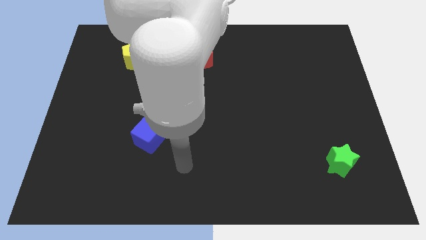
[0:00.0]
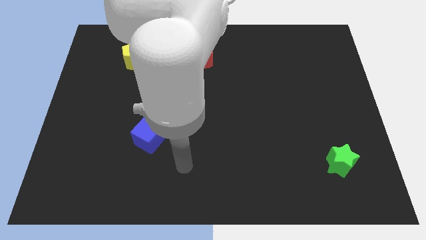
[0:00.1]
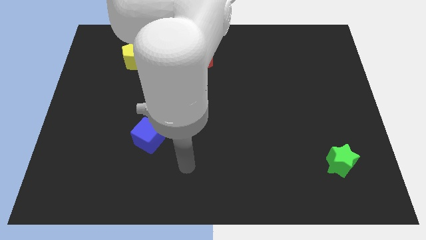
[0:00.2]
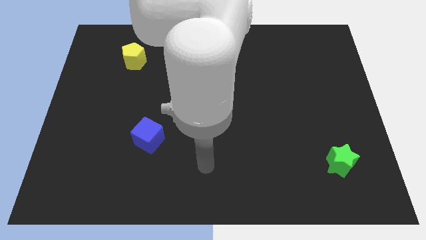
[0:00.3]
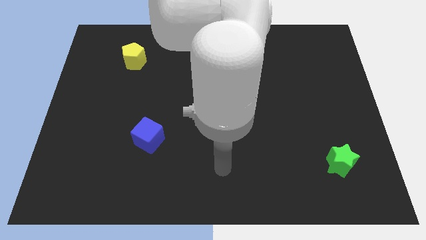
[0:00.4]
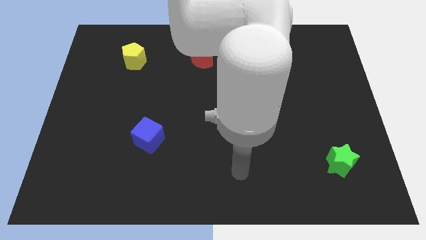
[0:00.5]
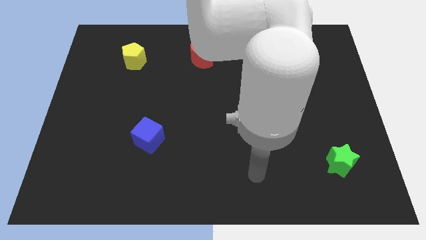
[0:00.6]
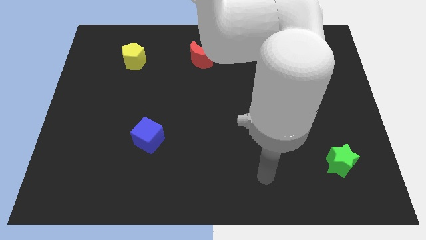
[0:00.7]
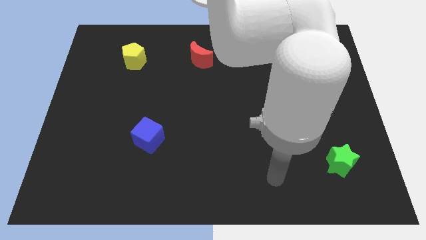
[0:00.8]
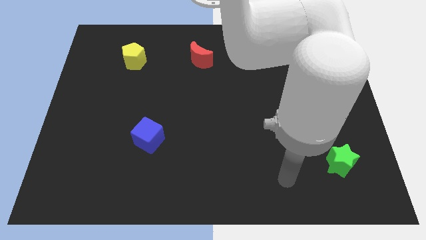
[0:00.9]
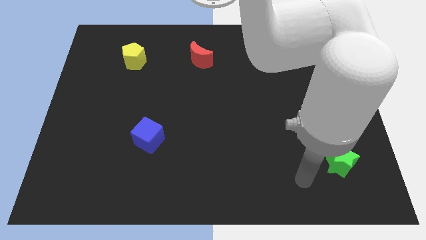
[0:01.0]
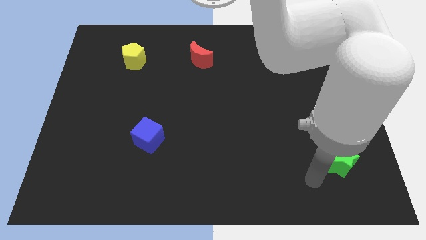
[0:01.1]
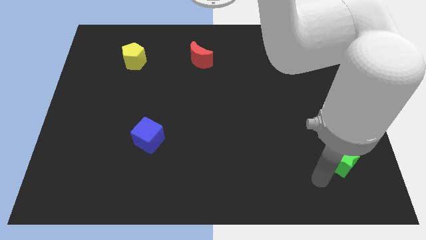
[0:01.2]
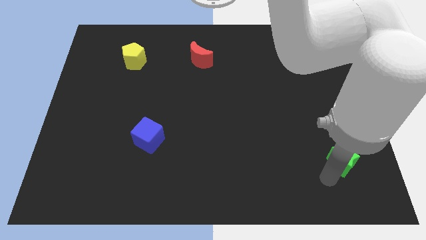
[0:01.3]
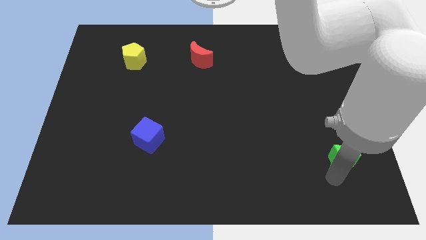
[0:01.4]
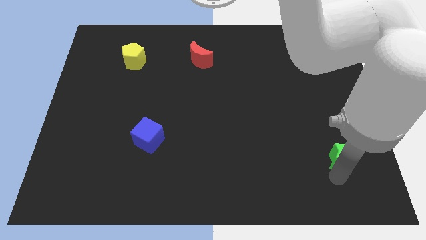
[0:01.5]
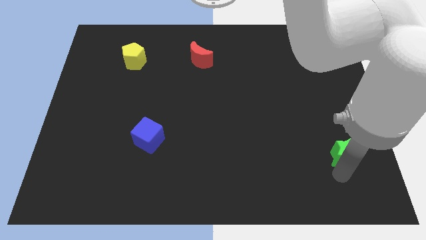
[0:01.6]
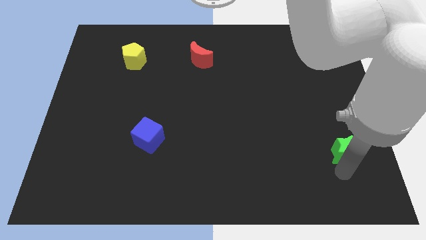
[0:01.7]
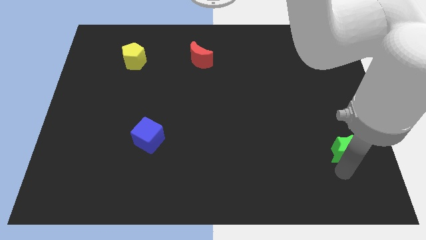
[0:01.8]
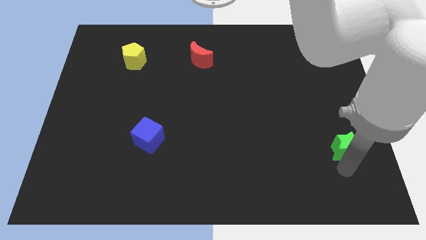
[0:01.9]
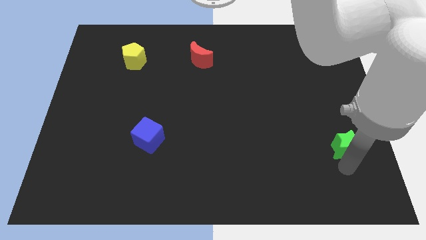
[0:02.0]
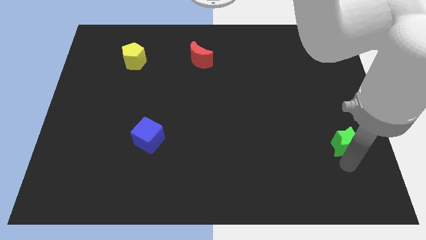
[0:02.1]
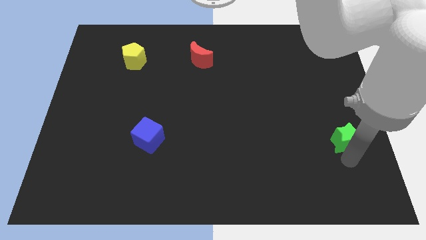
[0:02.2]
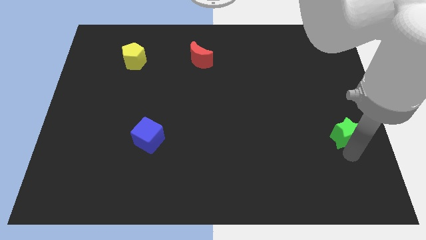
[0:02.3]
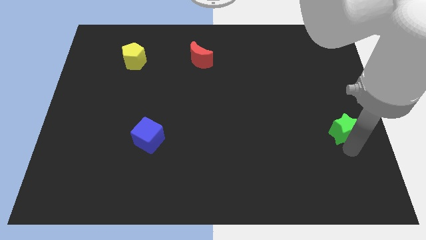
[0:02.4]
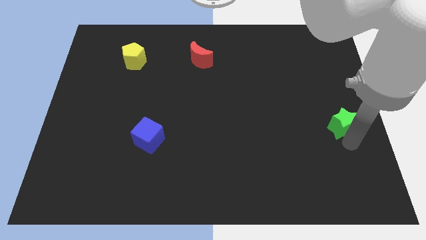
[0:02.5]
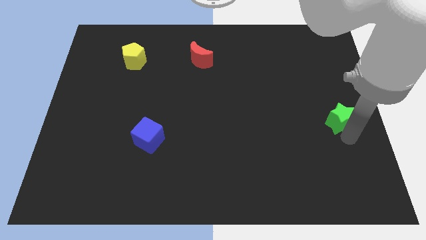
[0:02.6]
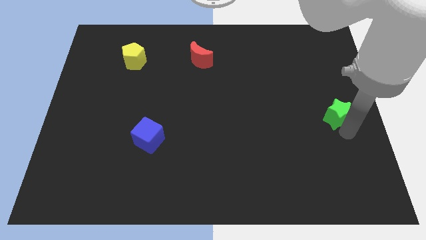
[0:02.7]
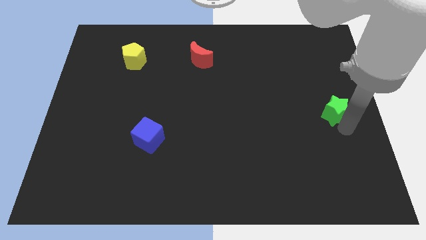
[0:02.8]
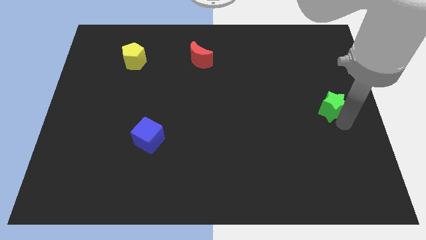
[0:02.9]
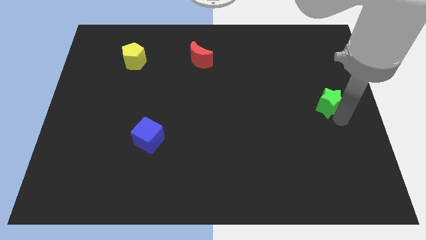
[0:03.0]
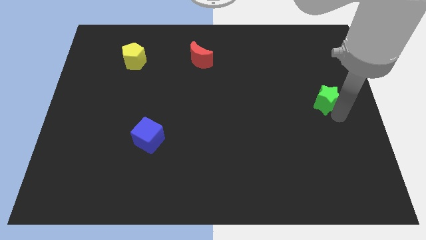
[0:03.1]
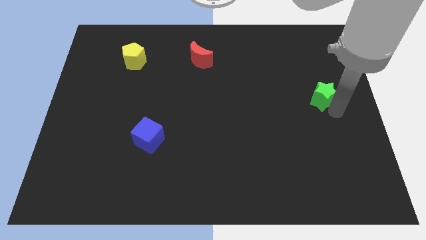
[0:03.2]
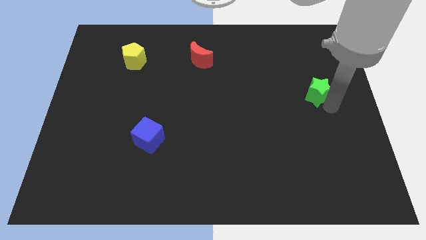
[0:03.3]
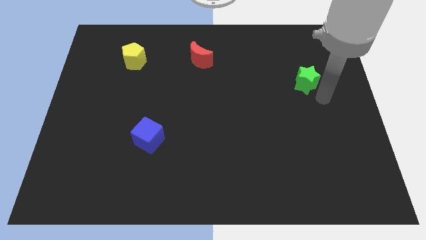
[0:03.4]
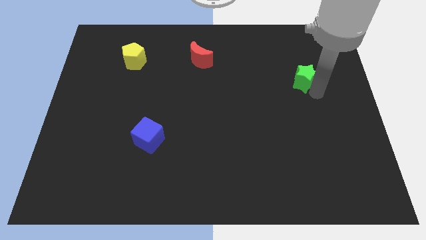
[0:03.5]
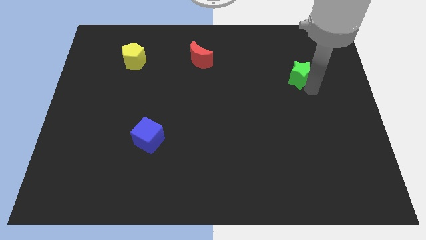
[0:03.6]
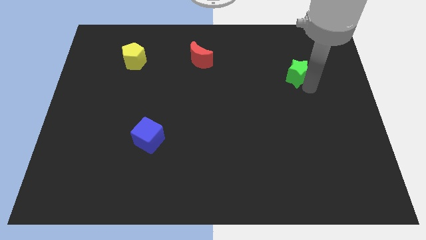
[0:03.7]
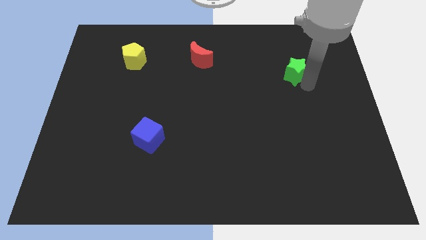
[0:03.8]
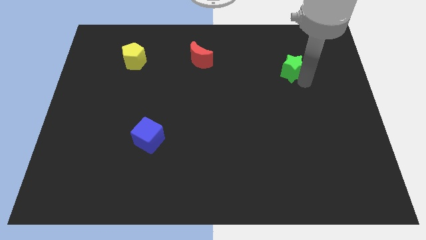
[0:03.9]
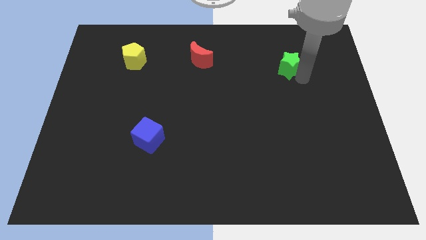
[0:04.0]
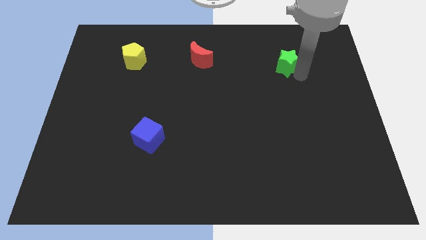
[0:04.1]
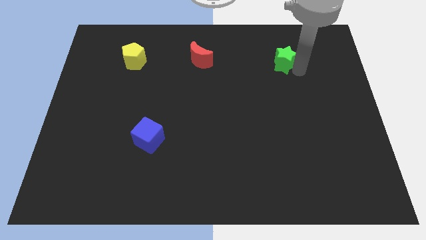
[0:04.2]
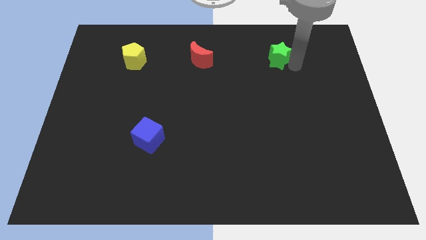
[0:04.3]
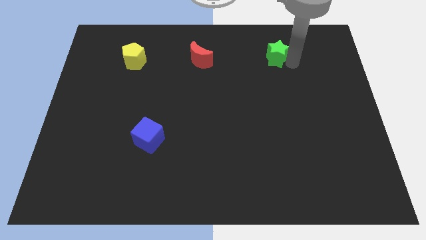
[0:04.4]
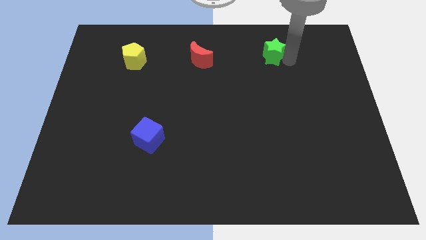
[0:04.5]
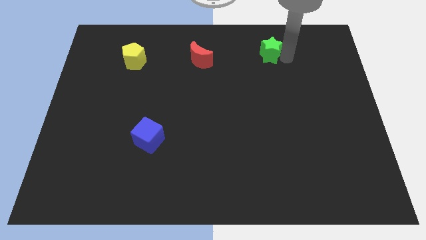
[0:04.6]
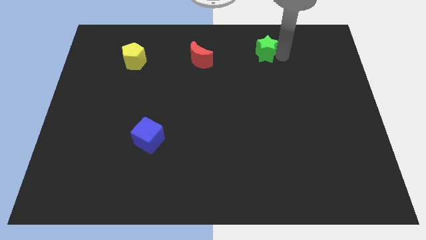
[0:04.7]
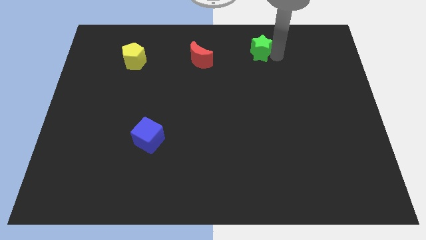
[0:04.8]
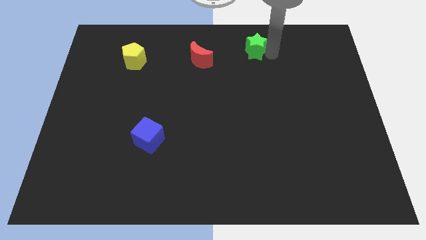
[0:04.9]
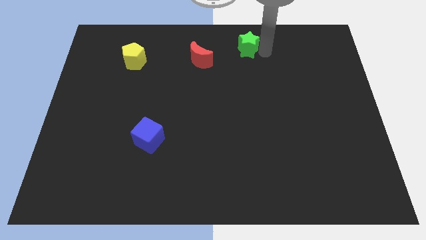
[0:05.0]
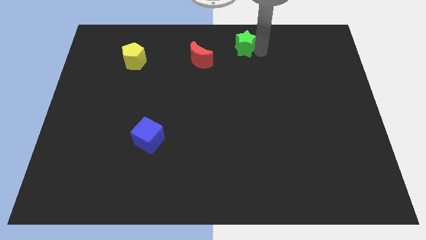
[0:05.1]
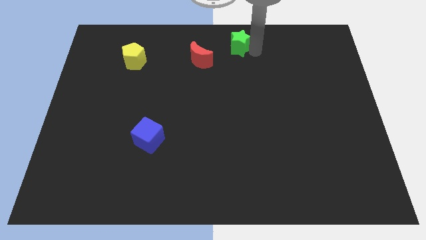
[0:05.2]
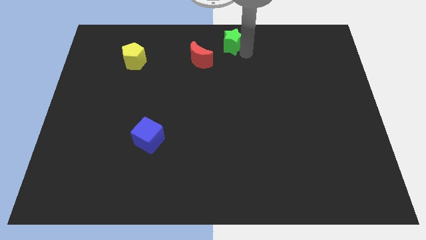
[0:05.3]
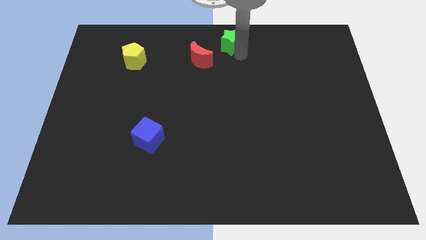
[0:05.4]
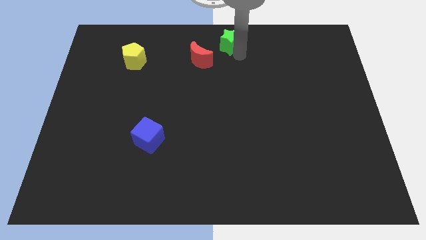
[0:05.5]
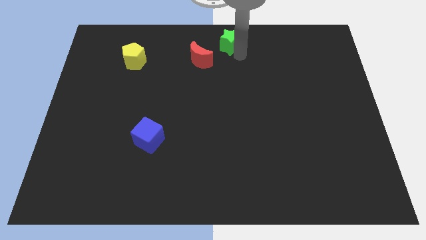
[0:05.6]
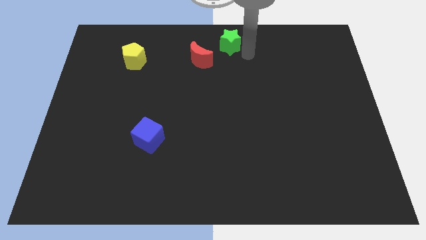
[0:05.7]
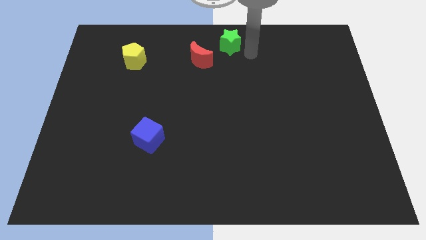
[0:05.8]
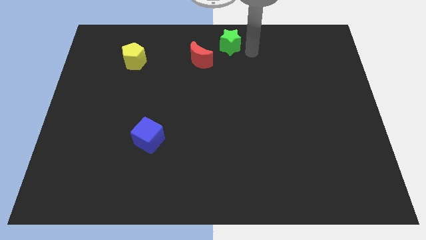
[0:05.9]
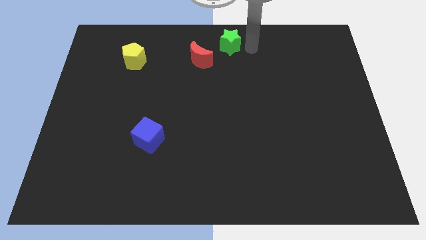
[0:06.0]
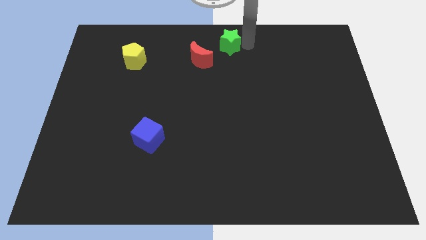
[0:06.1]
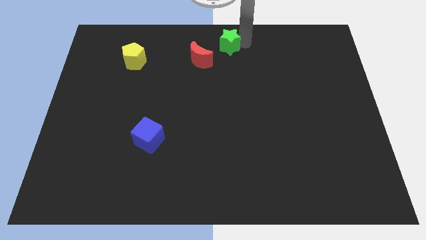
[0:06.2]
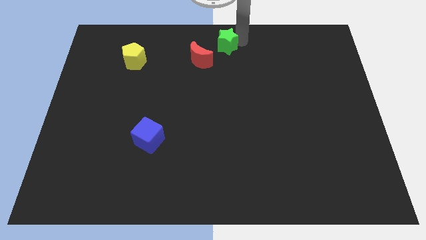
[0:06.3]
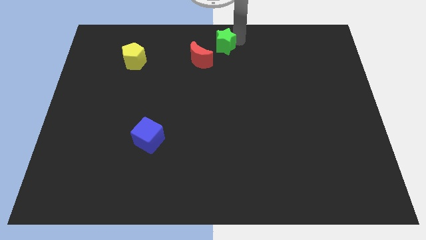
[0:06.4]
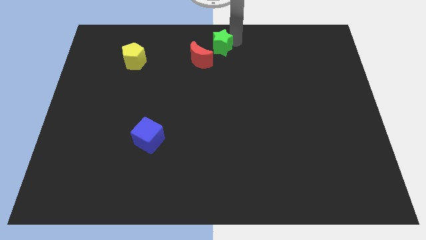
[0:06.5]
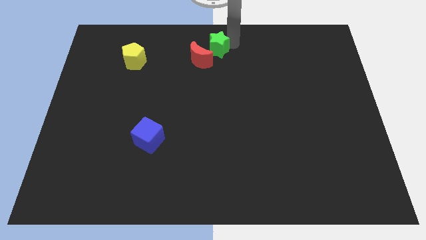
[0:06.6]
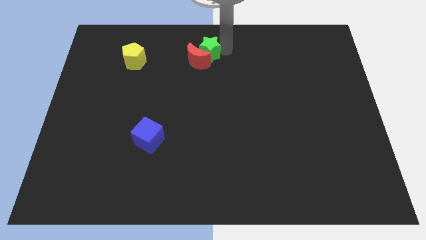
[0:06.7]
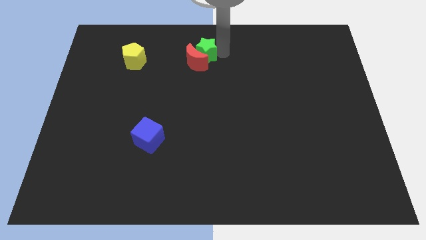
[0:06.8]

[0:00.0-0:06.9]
push the green star towards the red block

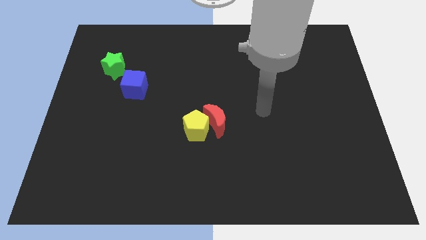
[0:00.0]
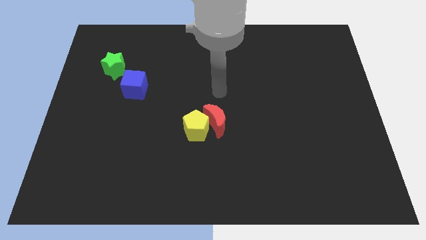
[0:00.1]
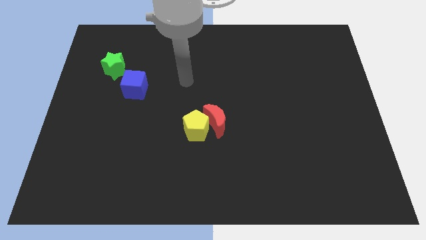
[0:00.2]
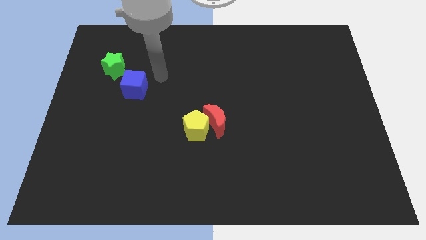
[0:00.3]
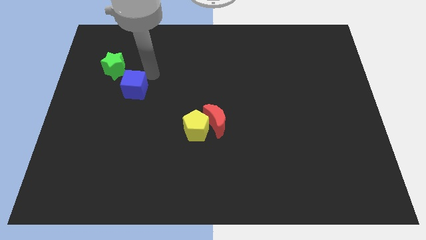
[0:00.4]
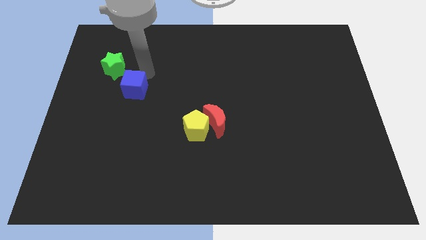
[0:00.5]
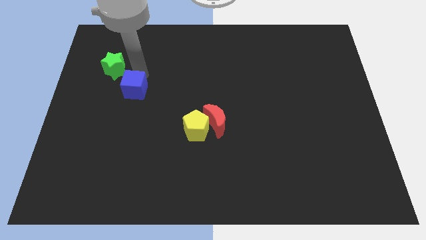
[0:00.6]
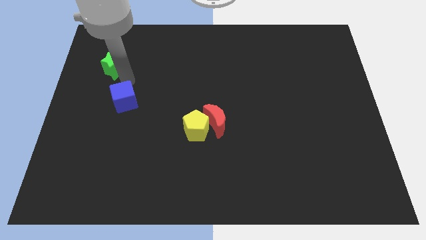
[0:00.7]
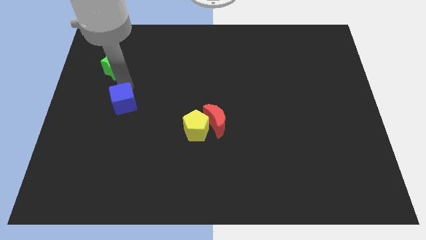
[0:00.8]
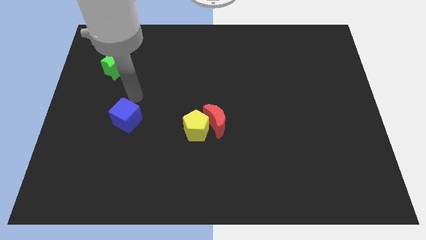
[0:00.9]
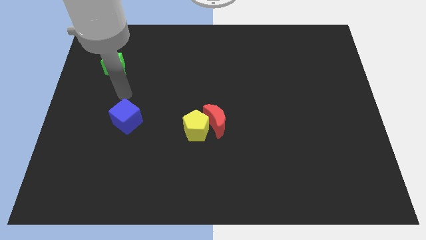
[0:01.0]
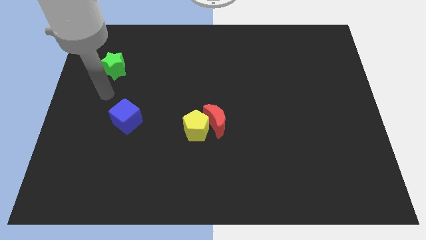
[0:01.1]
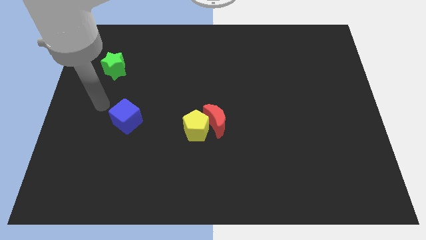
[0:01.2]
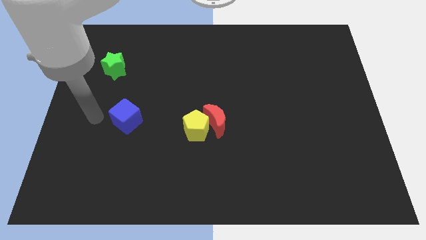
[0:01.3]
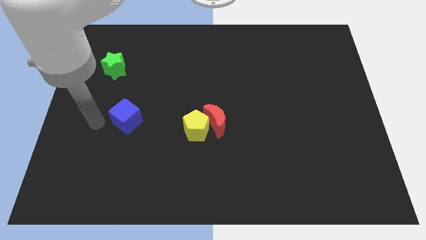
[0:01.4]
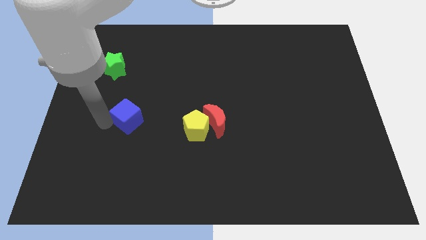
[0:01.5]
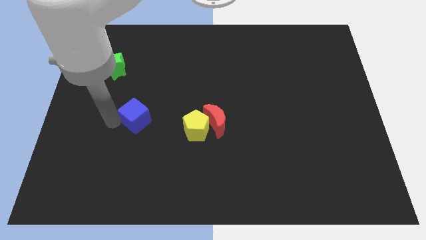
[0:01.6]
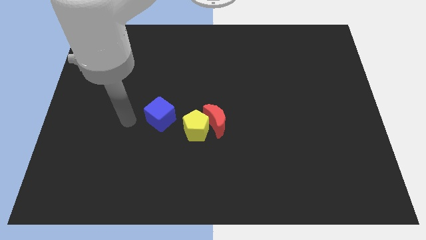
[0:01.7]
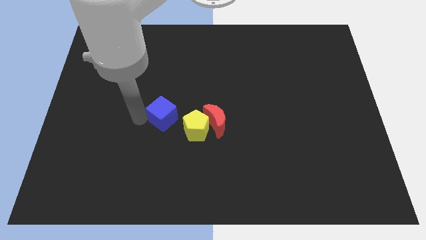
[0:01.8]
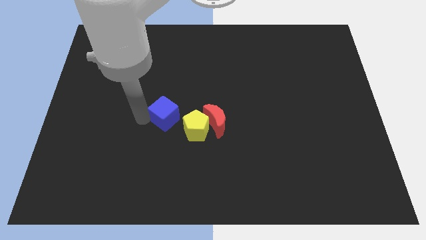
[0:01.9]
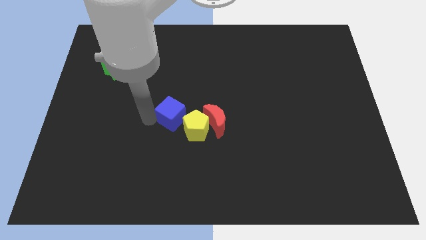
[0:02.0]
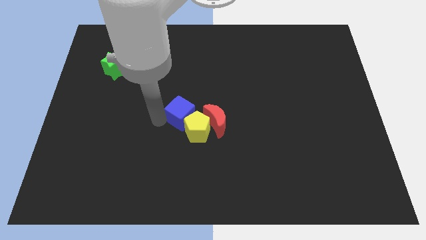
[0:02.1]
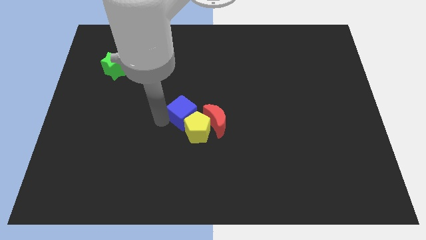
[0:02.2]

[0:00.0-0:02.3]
move the cube next to the pentagon
